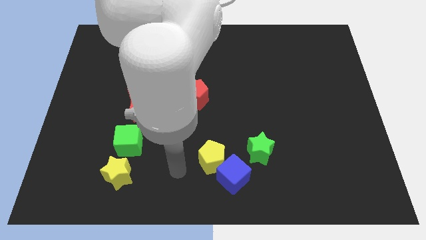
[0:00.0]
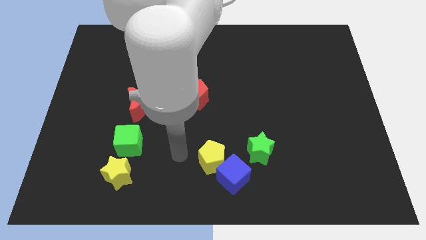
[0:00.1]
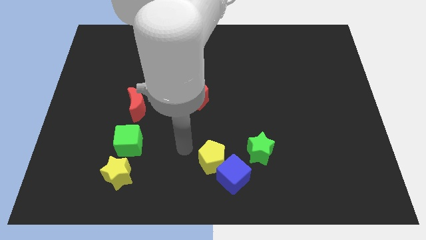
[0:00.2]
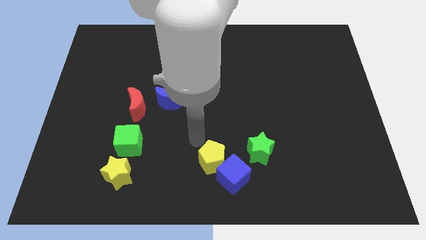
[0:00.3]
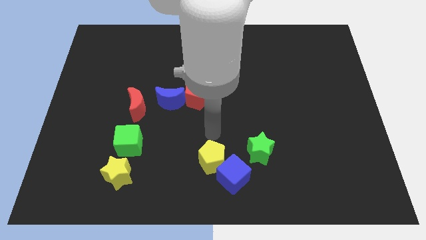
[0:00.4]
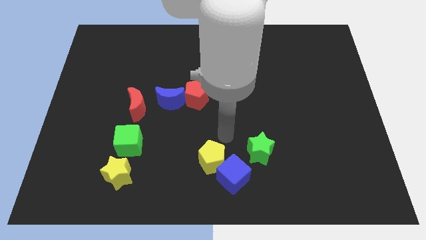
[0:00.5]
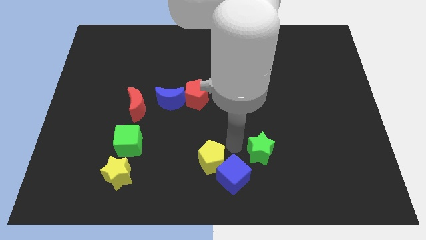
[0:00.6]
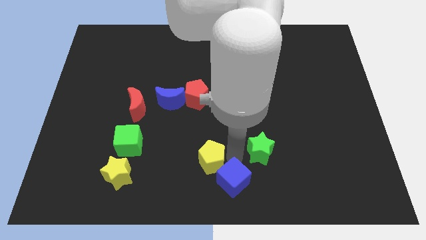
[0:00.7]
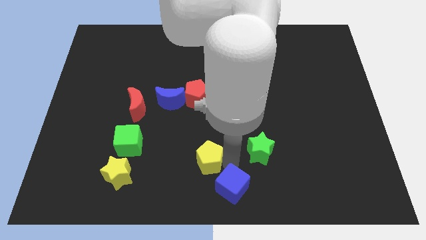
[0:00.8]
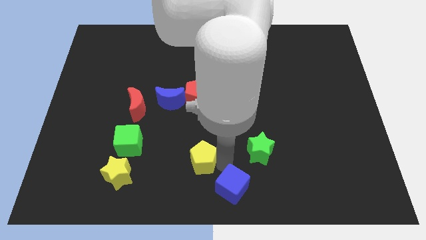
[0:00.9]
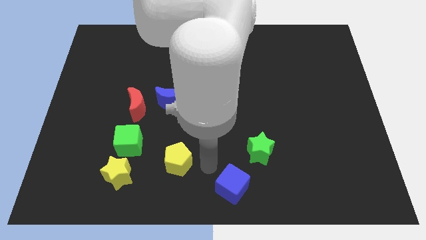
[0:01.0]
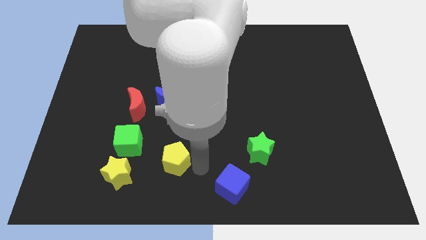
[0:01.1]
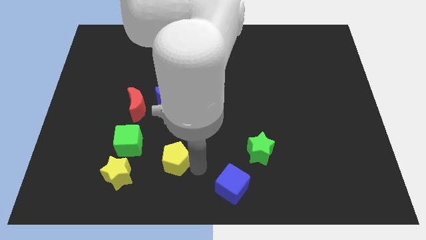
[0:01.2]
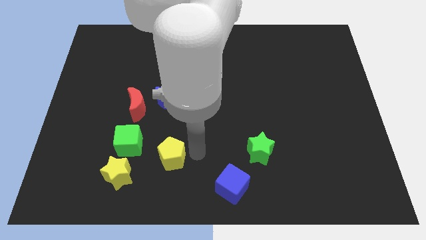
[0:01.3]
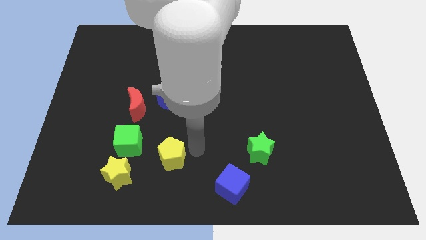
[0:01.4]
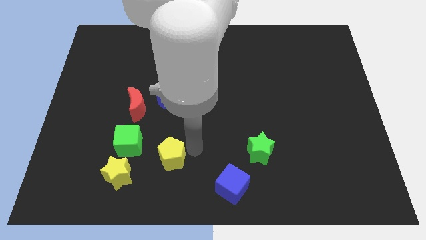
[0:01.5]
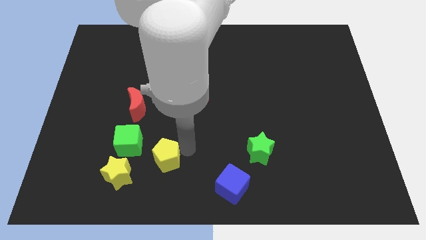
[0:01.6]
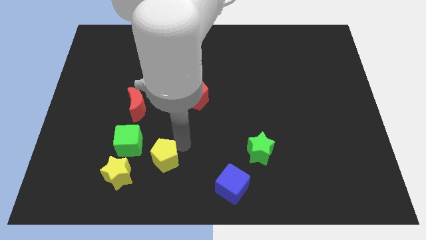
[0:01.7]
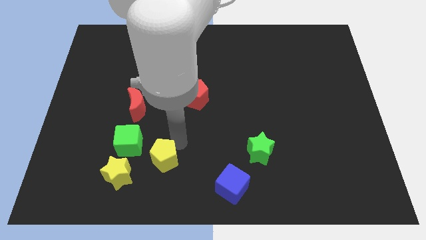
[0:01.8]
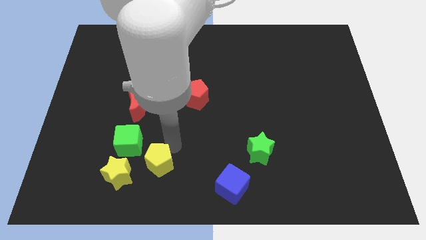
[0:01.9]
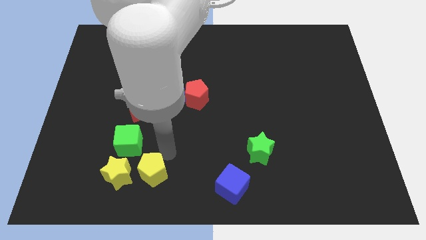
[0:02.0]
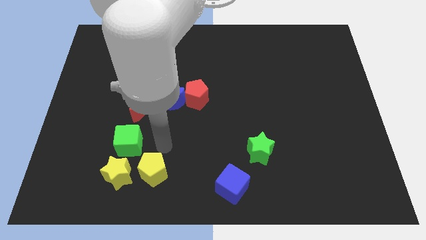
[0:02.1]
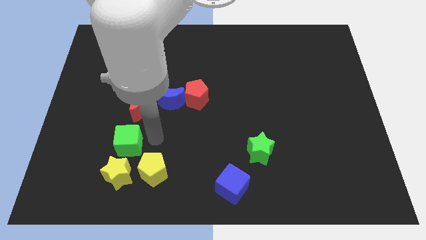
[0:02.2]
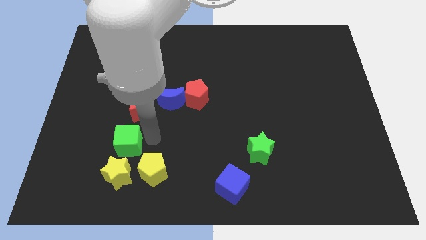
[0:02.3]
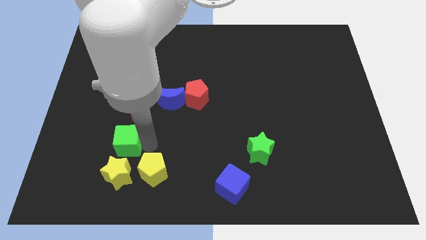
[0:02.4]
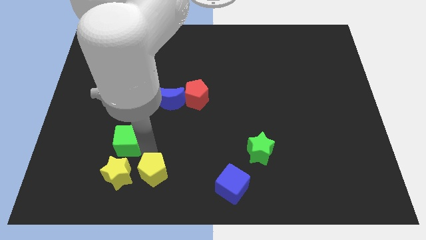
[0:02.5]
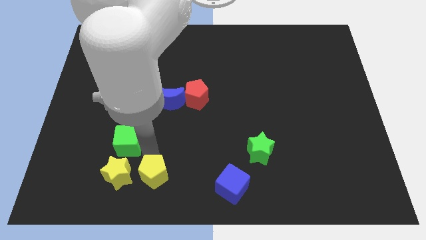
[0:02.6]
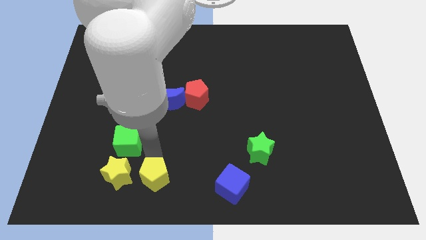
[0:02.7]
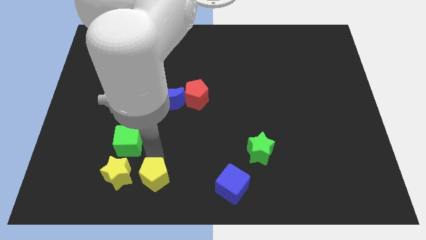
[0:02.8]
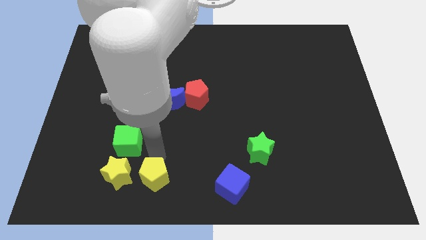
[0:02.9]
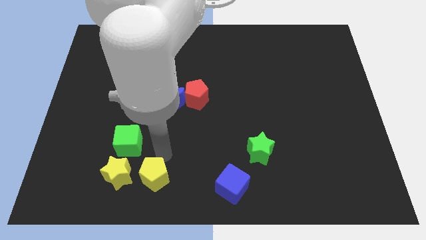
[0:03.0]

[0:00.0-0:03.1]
drag the yellow pentagon to the right side of the yellow star

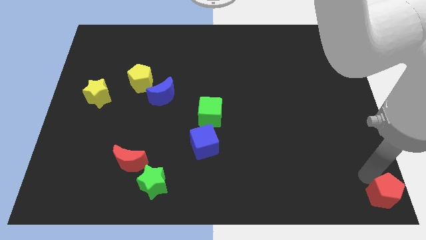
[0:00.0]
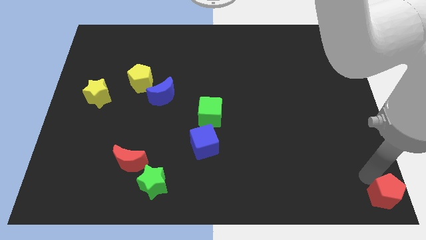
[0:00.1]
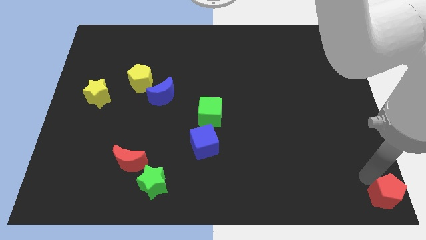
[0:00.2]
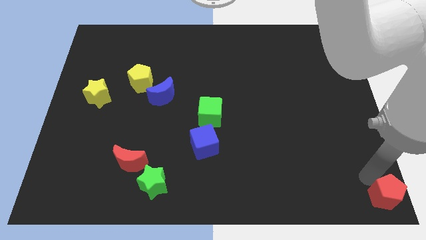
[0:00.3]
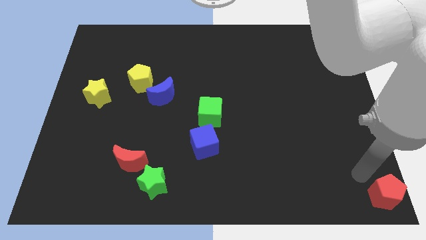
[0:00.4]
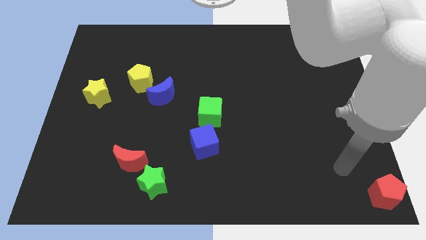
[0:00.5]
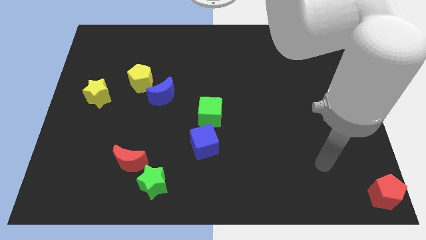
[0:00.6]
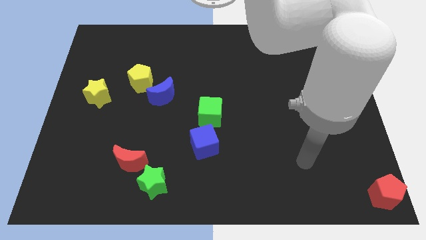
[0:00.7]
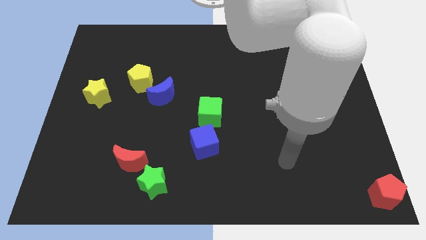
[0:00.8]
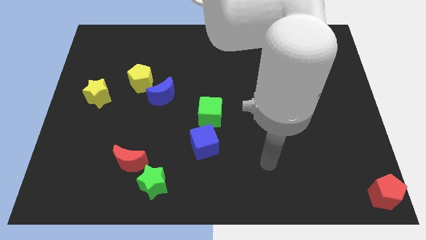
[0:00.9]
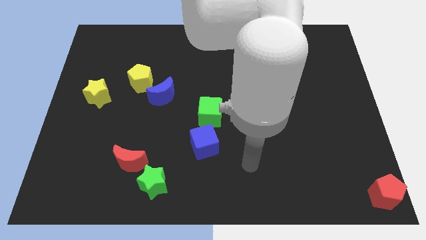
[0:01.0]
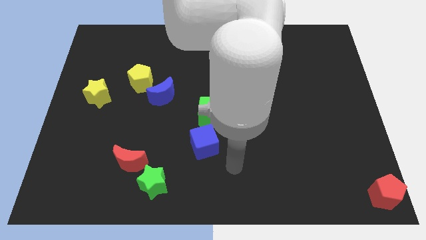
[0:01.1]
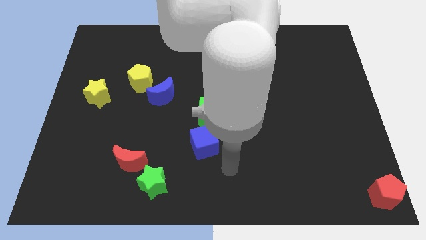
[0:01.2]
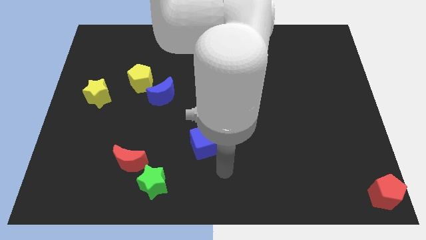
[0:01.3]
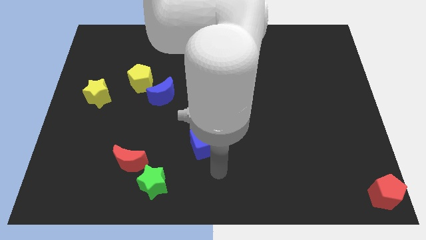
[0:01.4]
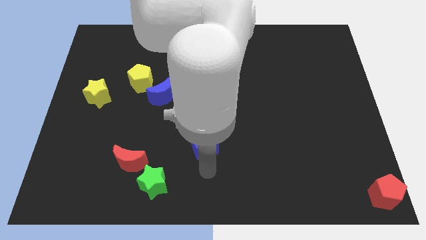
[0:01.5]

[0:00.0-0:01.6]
move the arm below to the blue cube

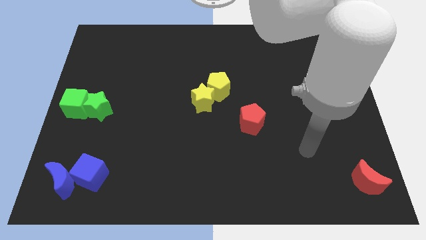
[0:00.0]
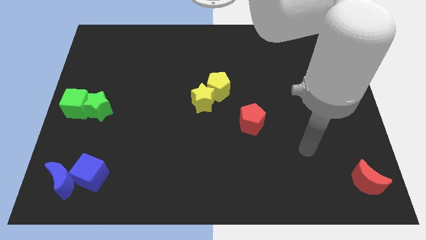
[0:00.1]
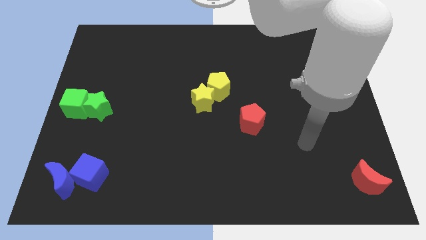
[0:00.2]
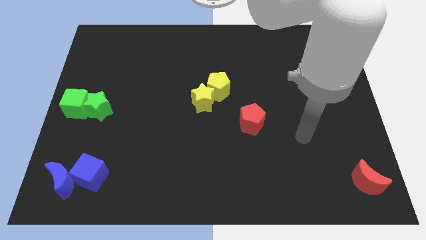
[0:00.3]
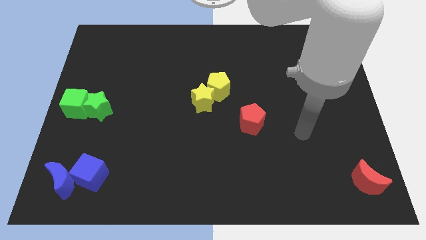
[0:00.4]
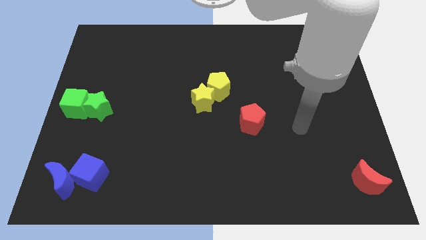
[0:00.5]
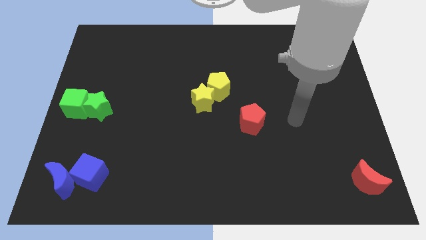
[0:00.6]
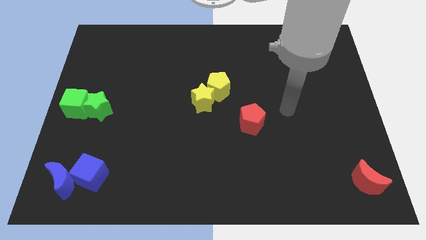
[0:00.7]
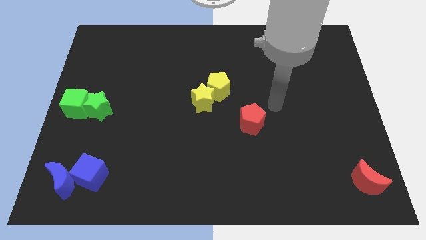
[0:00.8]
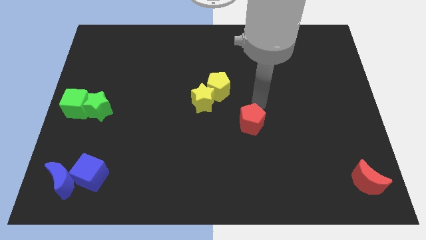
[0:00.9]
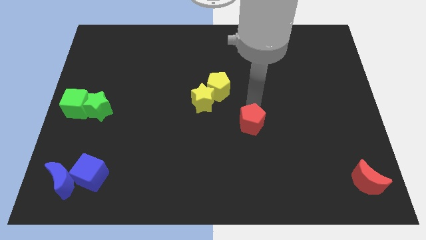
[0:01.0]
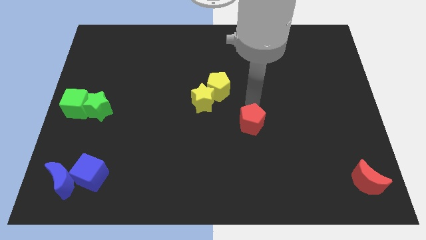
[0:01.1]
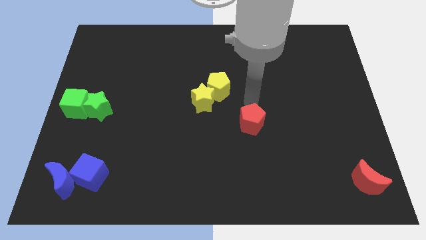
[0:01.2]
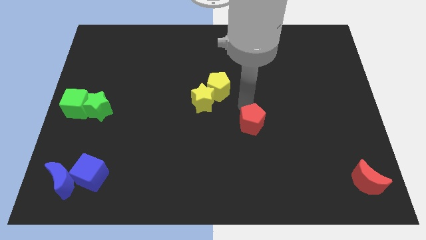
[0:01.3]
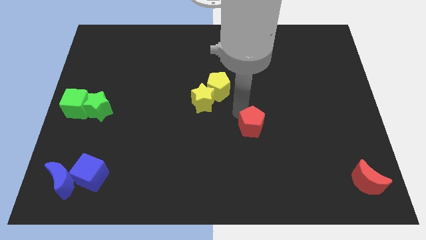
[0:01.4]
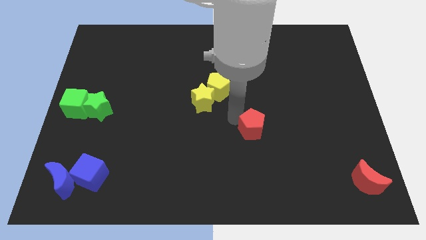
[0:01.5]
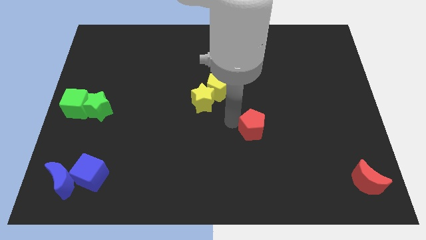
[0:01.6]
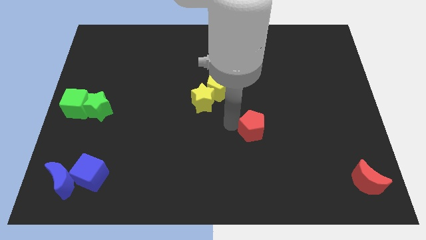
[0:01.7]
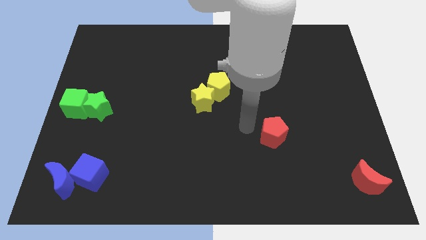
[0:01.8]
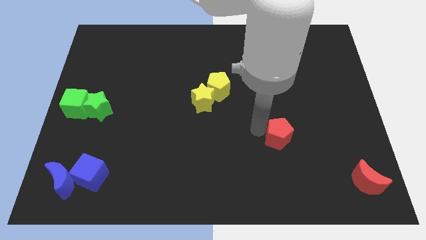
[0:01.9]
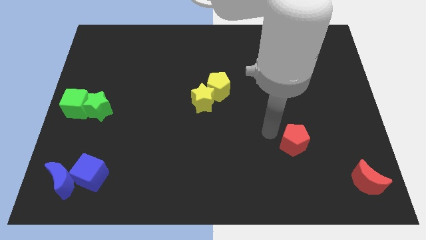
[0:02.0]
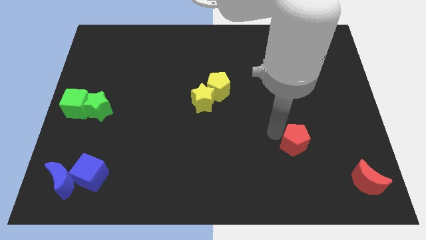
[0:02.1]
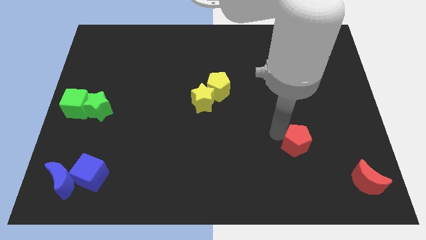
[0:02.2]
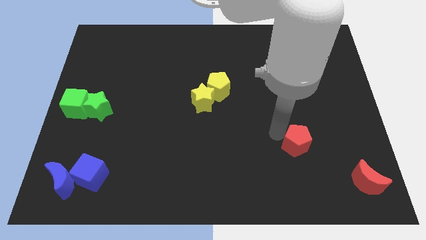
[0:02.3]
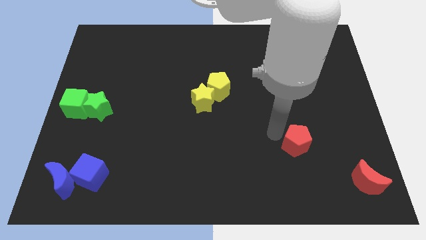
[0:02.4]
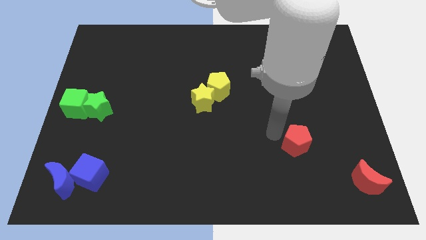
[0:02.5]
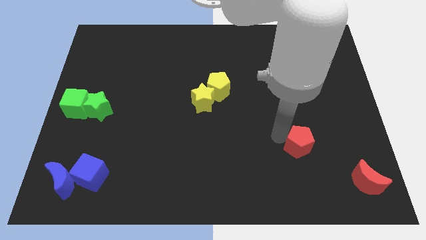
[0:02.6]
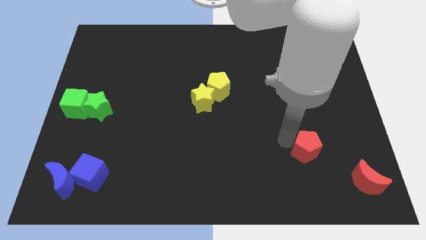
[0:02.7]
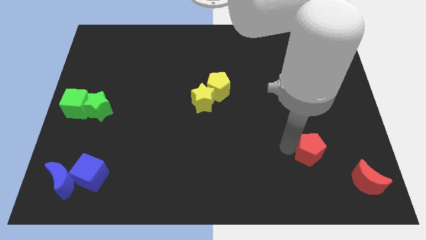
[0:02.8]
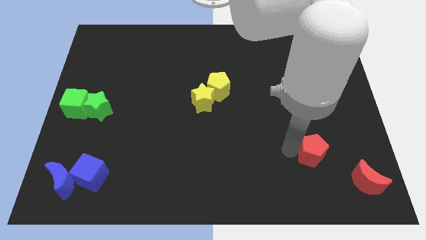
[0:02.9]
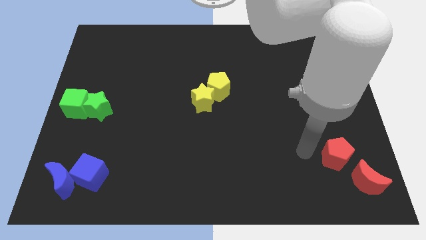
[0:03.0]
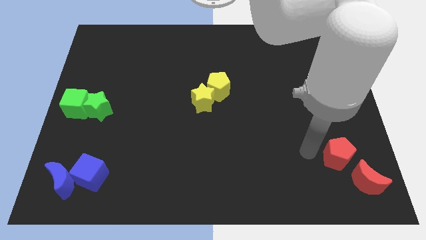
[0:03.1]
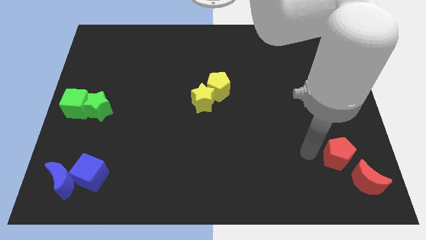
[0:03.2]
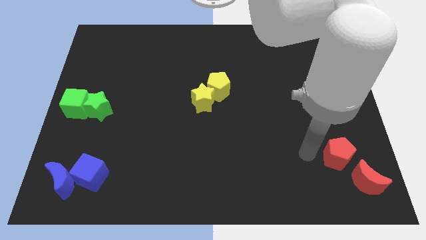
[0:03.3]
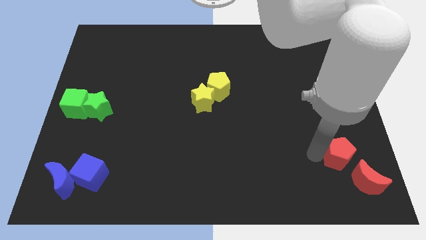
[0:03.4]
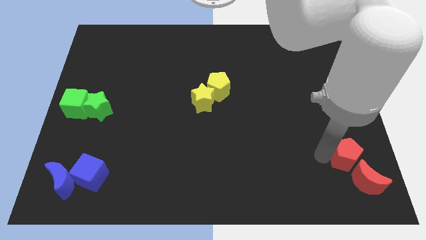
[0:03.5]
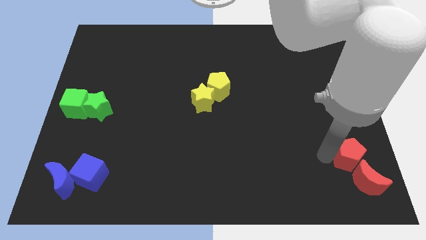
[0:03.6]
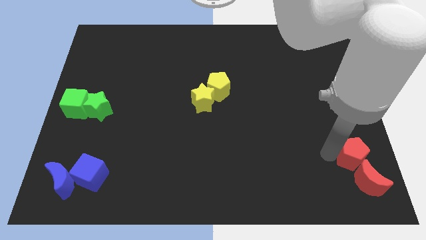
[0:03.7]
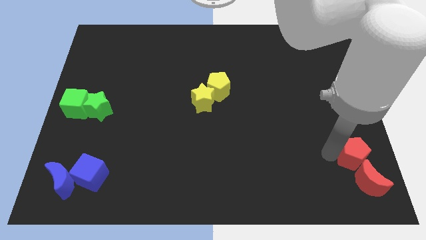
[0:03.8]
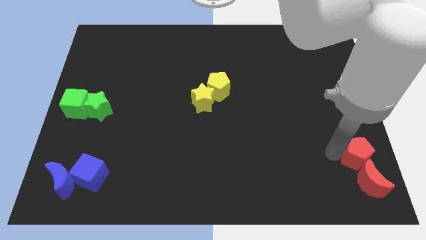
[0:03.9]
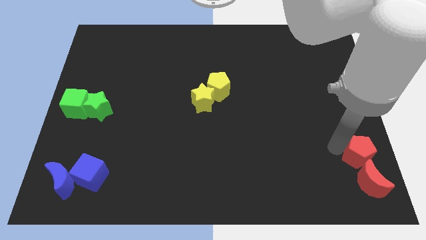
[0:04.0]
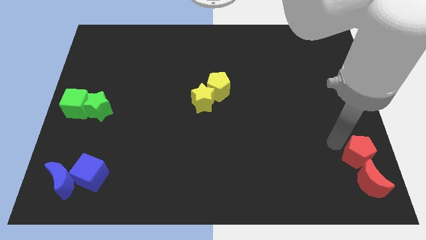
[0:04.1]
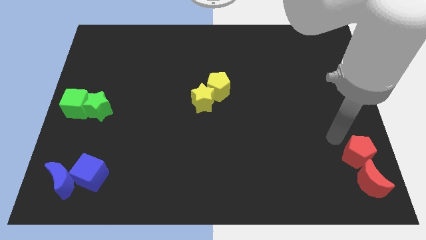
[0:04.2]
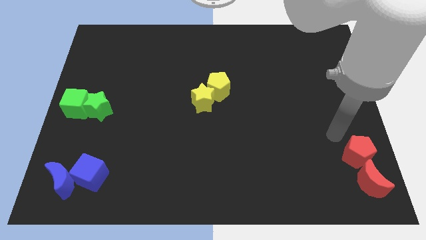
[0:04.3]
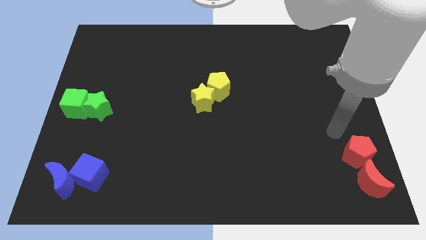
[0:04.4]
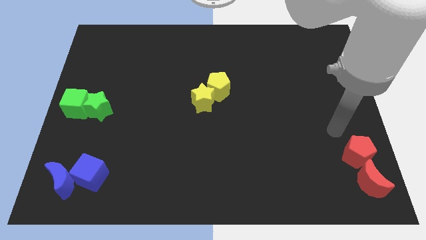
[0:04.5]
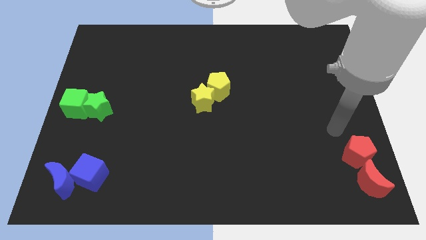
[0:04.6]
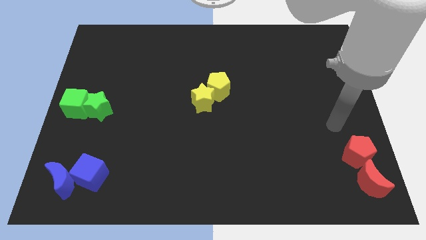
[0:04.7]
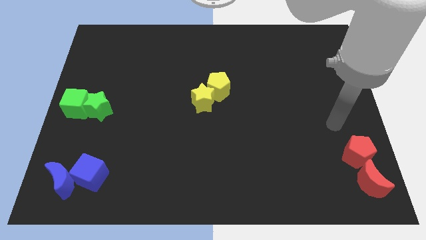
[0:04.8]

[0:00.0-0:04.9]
make the red pentagon to touch the top side of the red crescent
